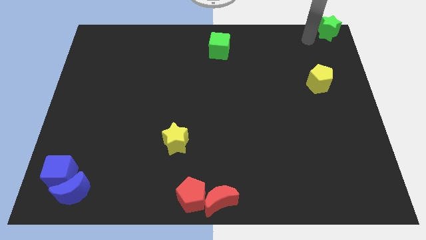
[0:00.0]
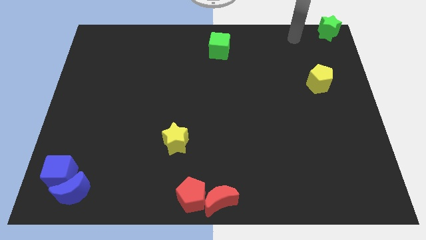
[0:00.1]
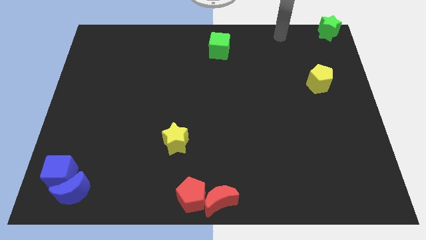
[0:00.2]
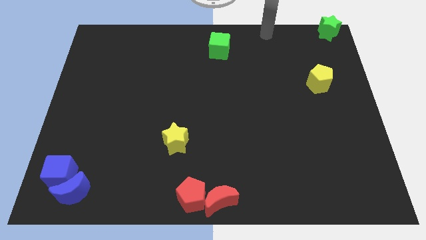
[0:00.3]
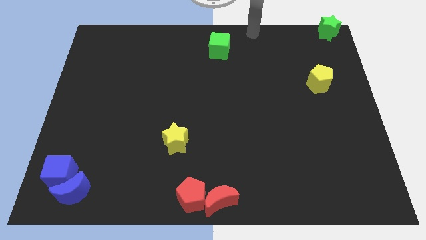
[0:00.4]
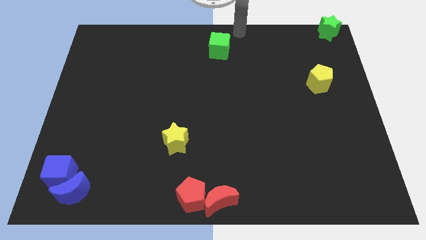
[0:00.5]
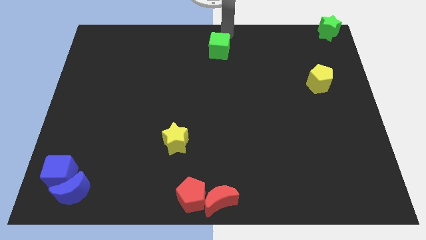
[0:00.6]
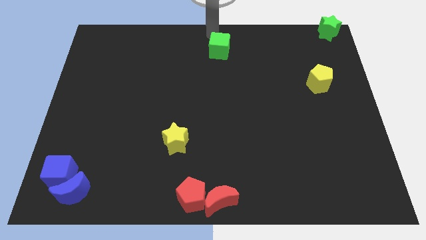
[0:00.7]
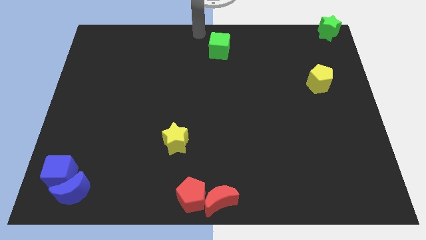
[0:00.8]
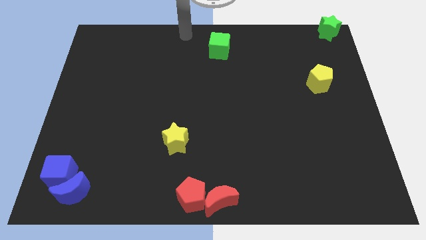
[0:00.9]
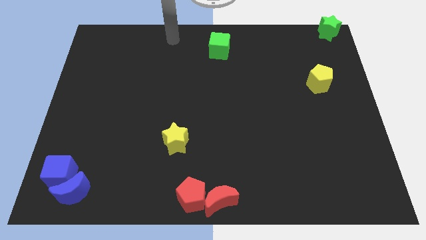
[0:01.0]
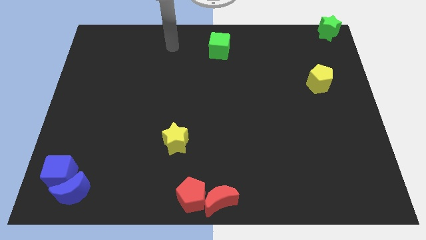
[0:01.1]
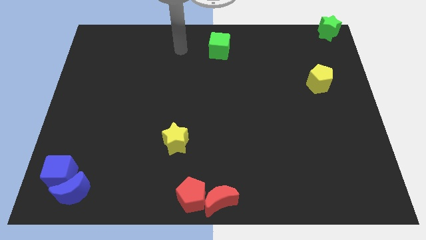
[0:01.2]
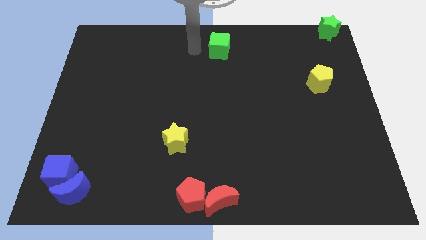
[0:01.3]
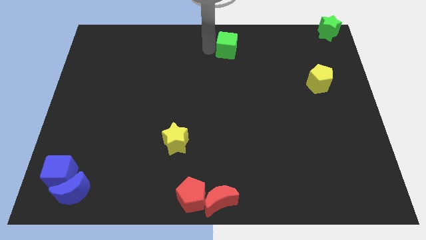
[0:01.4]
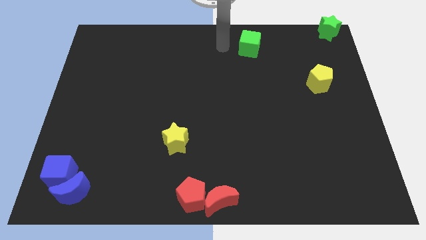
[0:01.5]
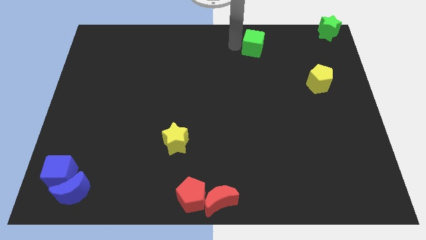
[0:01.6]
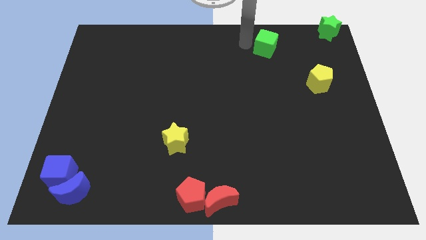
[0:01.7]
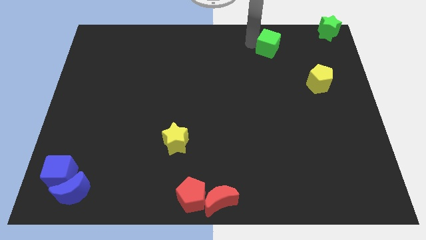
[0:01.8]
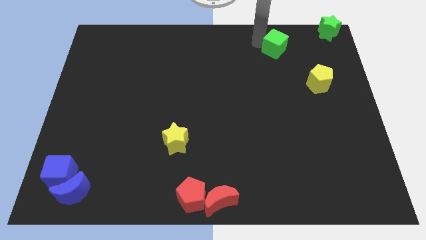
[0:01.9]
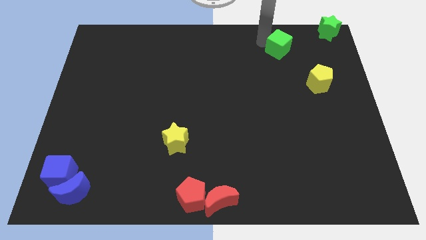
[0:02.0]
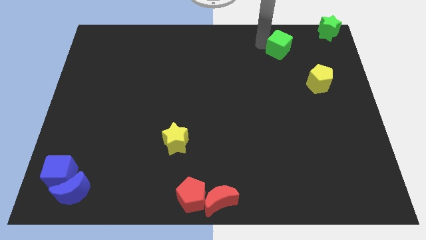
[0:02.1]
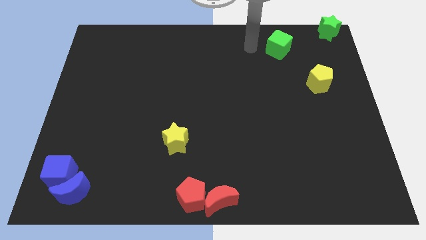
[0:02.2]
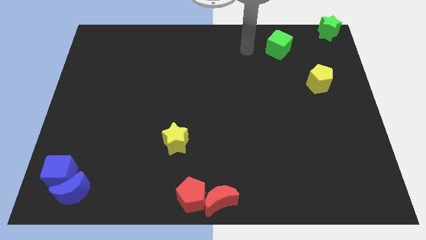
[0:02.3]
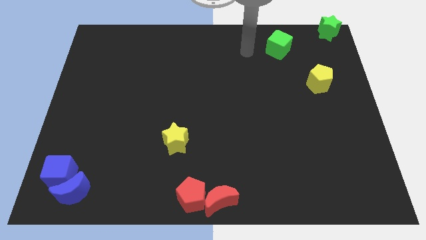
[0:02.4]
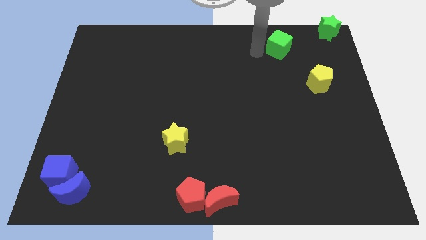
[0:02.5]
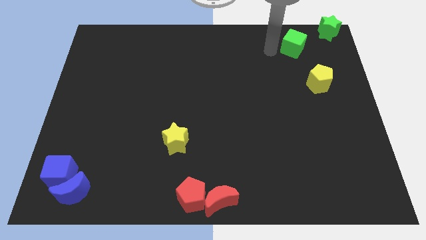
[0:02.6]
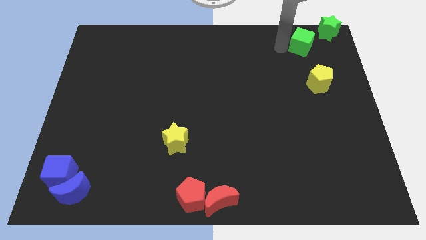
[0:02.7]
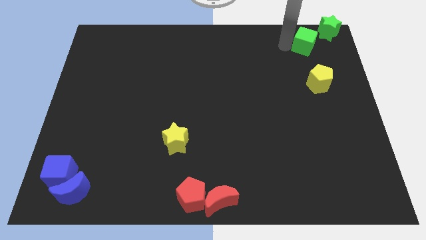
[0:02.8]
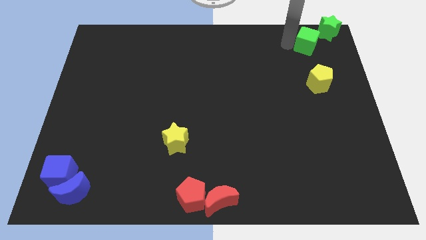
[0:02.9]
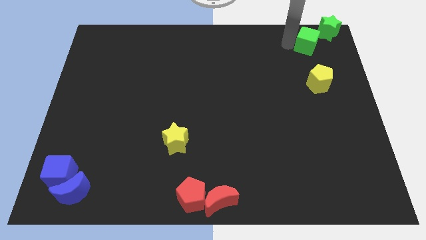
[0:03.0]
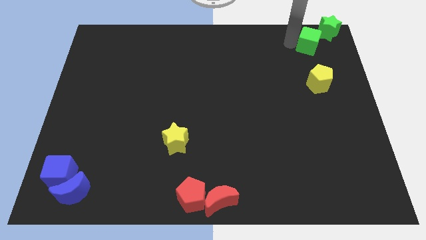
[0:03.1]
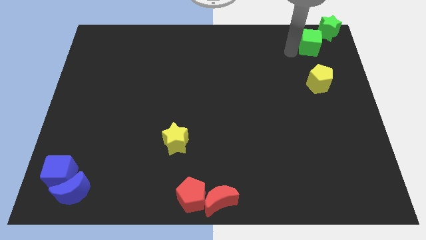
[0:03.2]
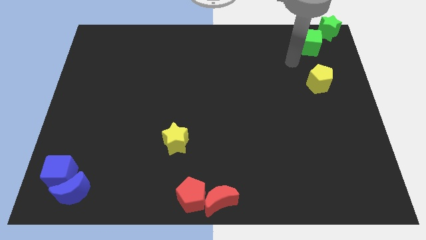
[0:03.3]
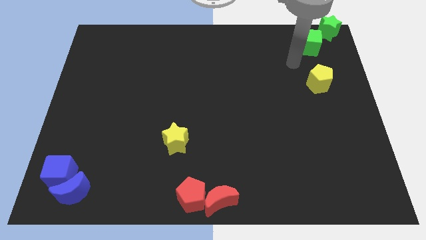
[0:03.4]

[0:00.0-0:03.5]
push the green cube towards the green star

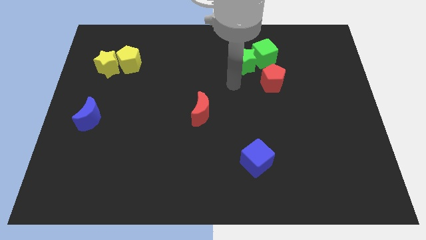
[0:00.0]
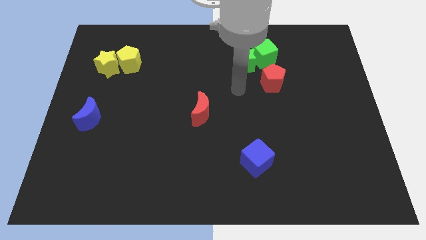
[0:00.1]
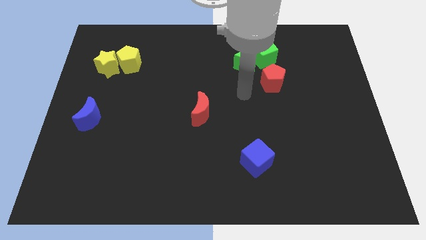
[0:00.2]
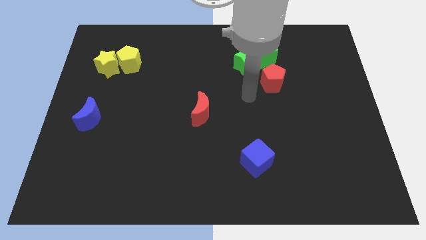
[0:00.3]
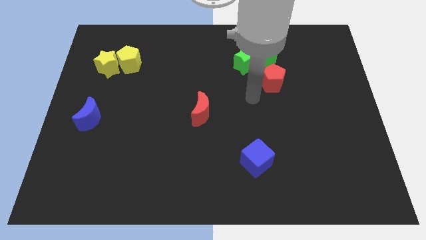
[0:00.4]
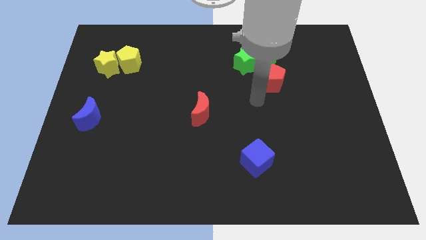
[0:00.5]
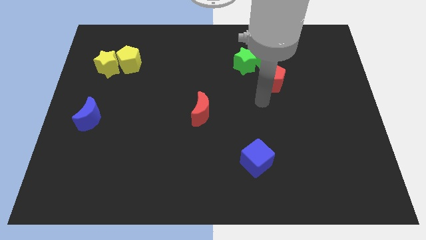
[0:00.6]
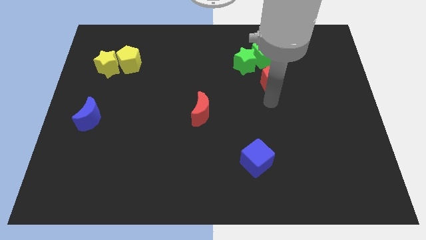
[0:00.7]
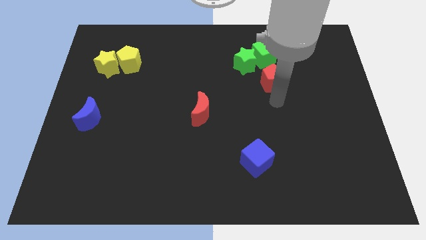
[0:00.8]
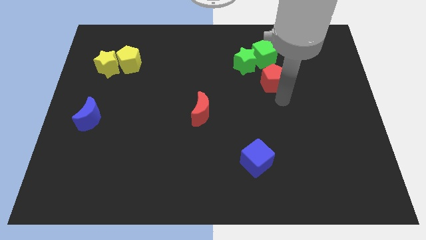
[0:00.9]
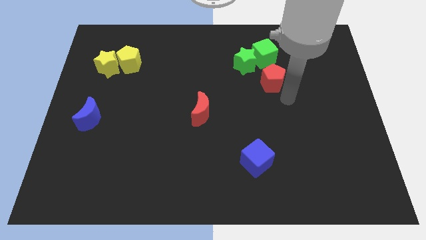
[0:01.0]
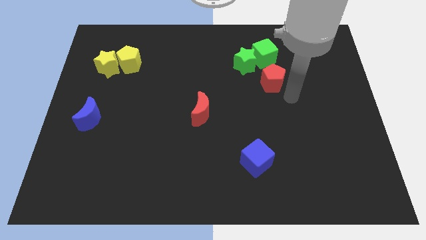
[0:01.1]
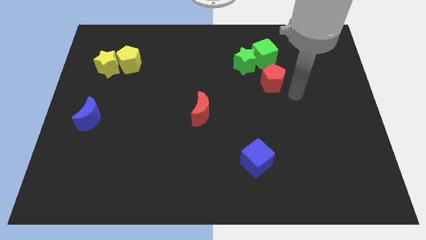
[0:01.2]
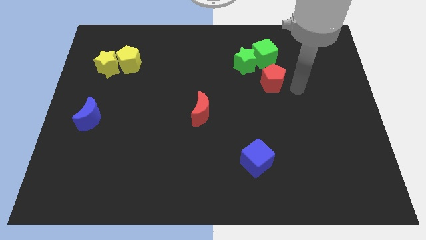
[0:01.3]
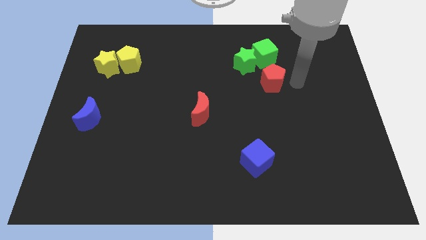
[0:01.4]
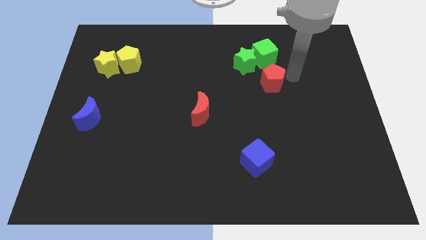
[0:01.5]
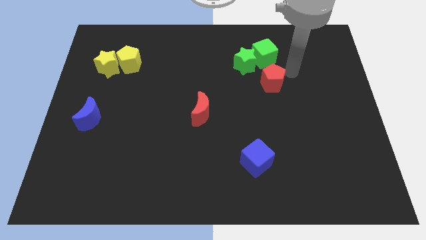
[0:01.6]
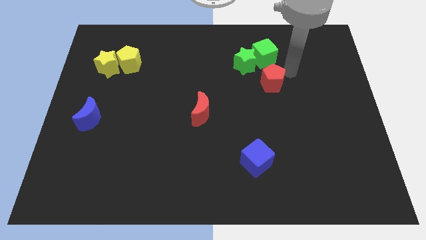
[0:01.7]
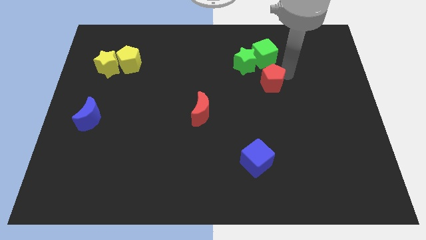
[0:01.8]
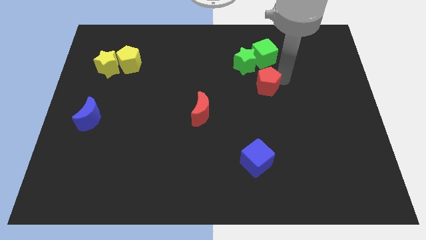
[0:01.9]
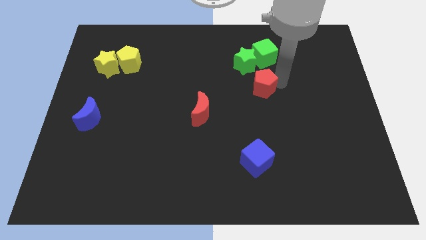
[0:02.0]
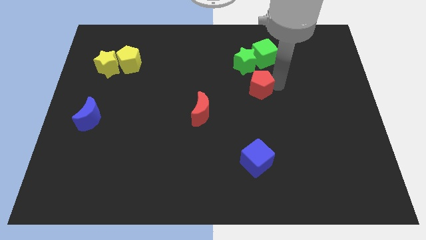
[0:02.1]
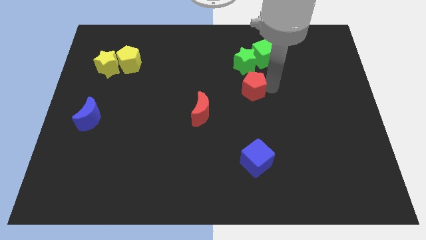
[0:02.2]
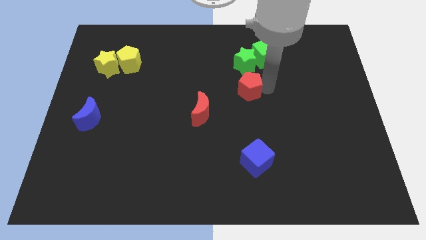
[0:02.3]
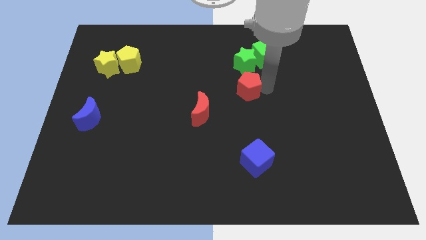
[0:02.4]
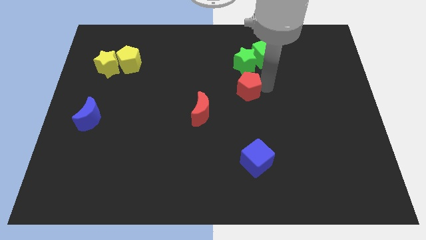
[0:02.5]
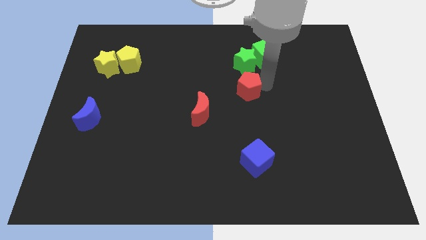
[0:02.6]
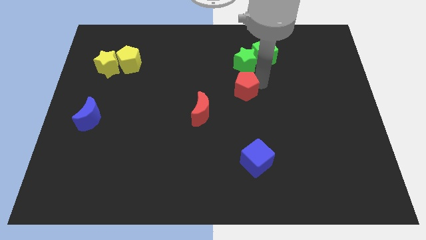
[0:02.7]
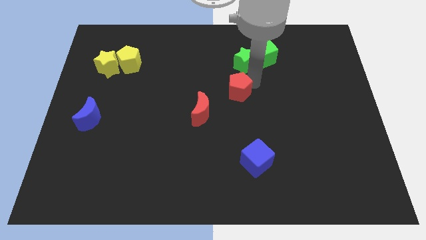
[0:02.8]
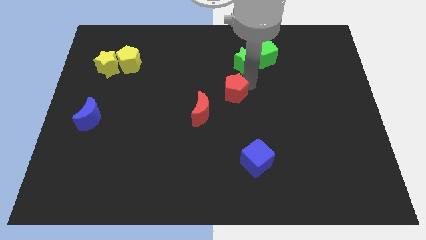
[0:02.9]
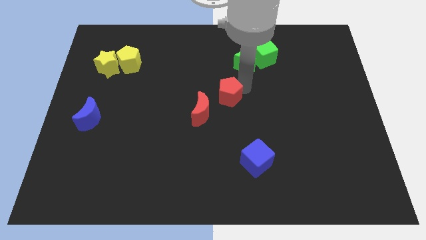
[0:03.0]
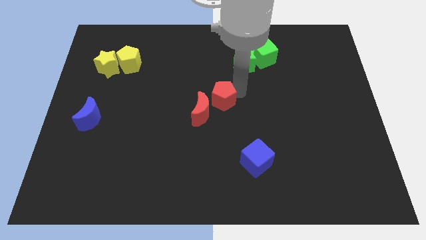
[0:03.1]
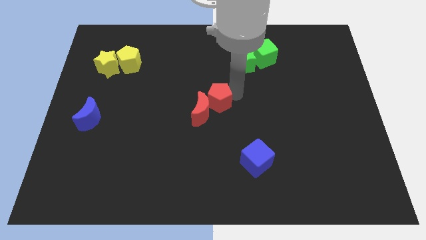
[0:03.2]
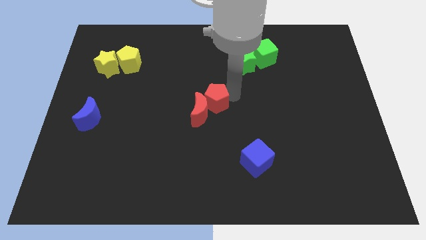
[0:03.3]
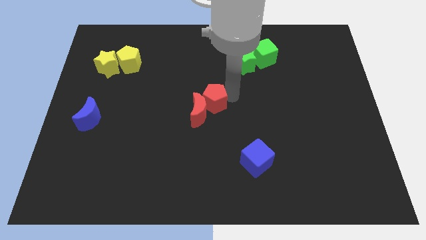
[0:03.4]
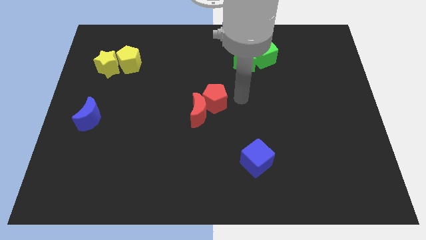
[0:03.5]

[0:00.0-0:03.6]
move the red pentagon towards red crescent

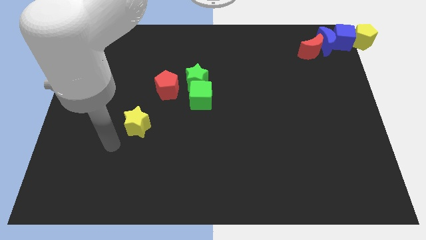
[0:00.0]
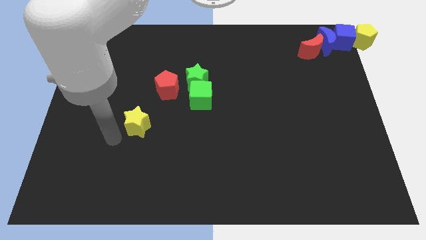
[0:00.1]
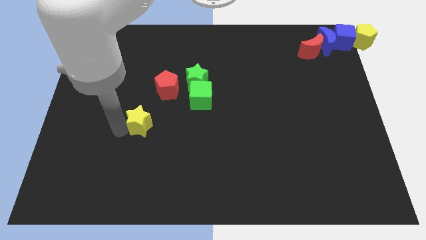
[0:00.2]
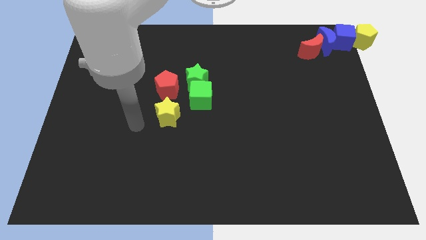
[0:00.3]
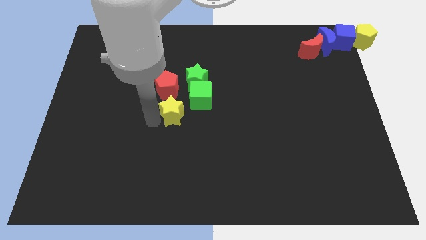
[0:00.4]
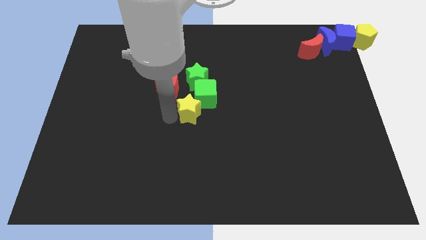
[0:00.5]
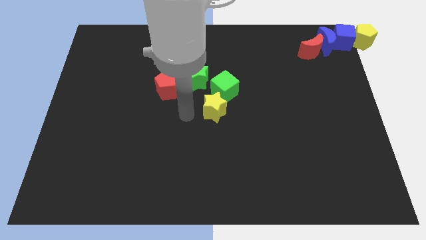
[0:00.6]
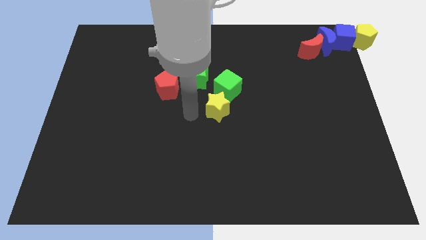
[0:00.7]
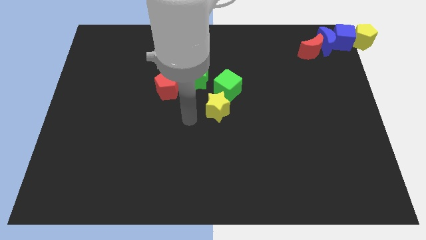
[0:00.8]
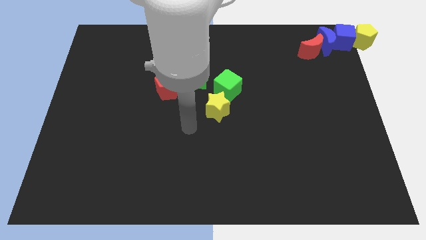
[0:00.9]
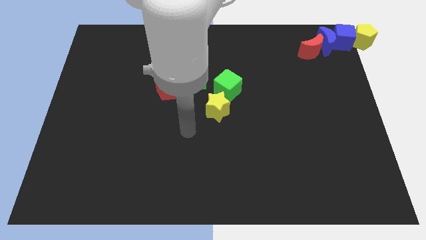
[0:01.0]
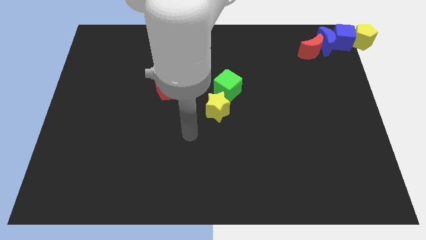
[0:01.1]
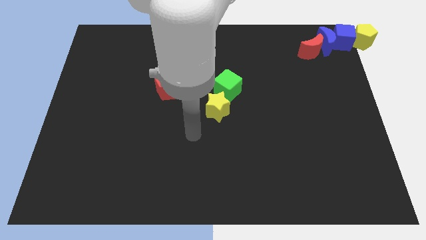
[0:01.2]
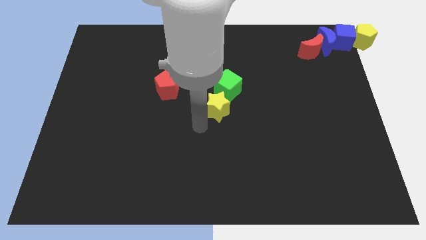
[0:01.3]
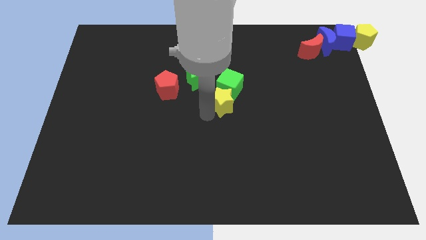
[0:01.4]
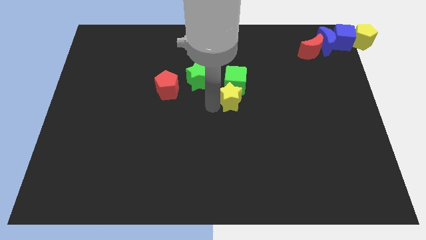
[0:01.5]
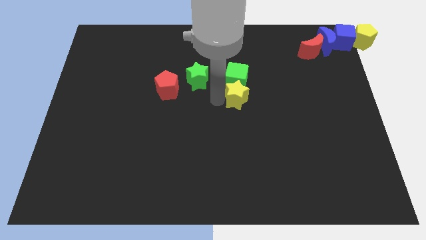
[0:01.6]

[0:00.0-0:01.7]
push the yellow star into the green cube
